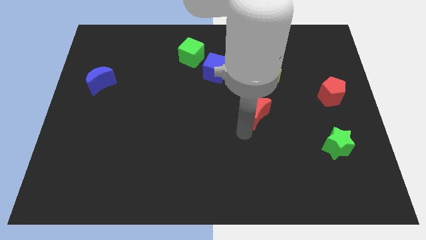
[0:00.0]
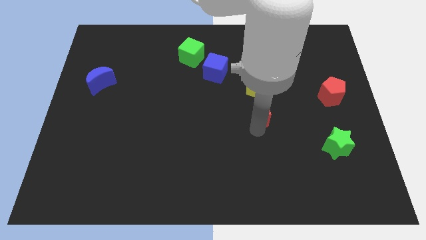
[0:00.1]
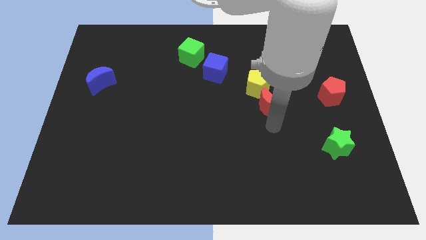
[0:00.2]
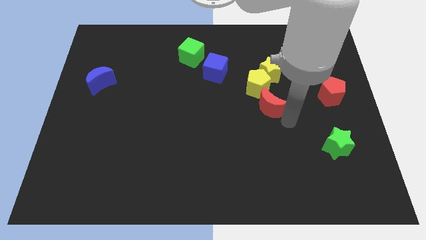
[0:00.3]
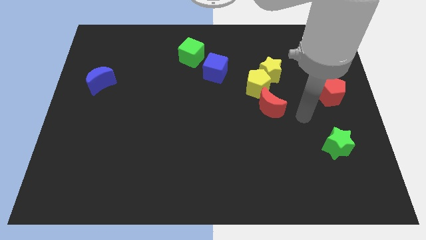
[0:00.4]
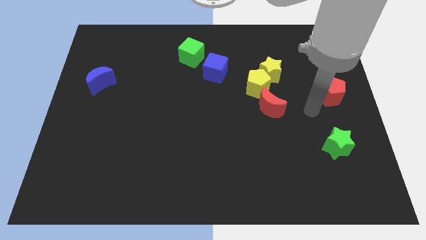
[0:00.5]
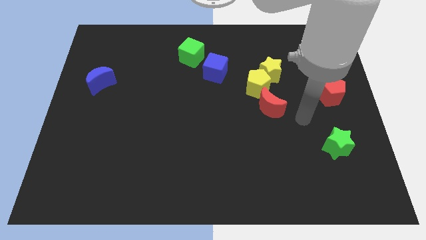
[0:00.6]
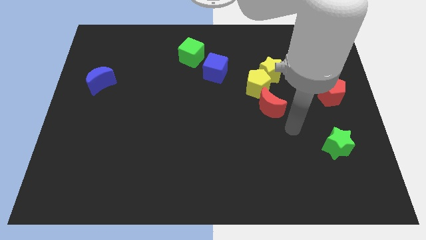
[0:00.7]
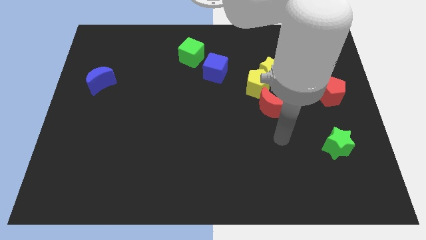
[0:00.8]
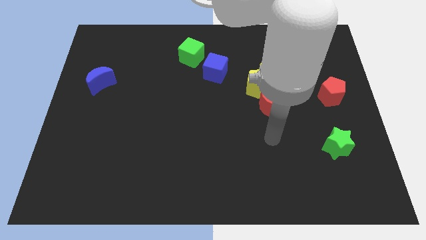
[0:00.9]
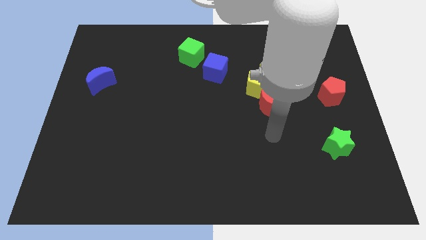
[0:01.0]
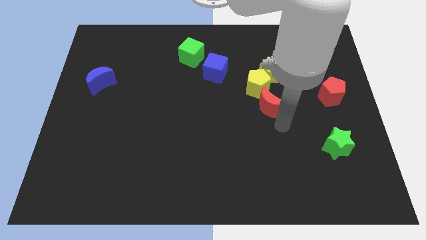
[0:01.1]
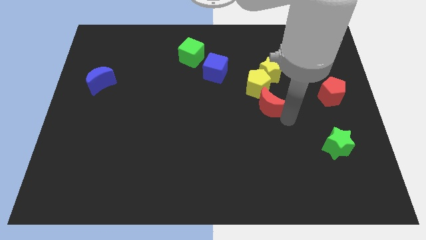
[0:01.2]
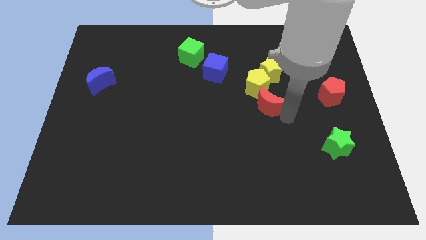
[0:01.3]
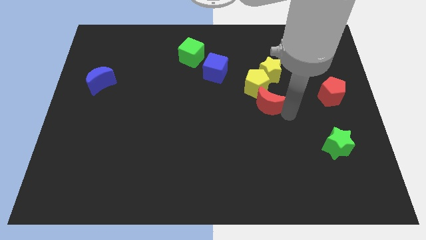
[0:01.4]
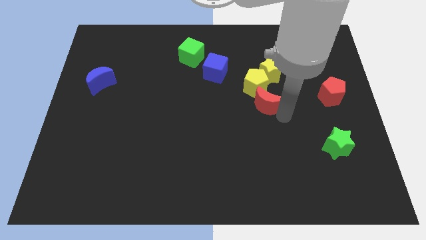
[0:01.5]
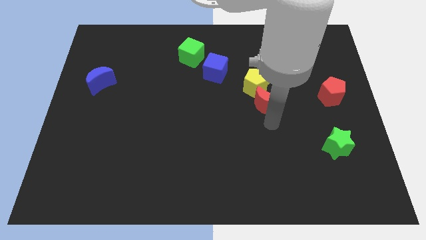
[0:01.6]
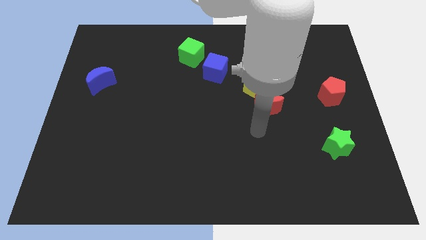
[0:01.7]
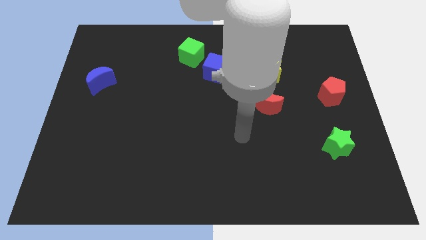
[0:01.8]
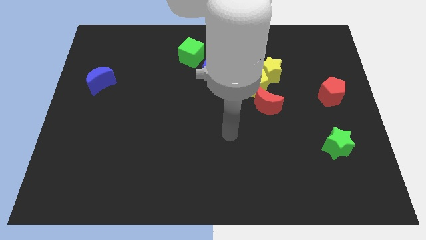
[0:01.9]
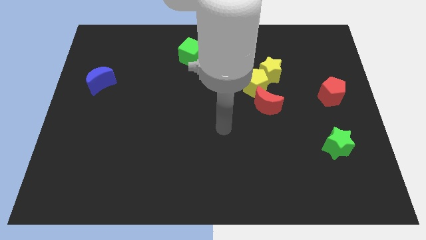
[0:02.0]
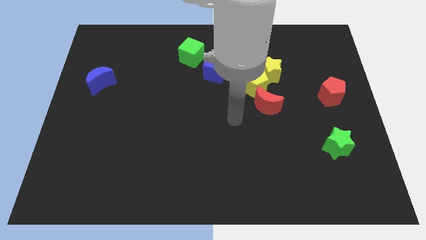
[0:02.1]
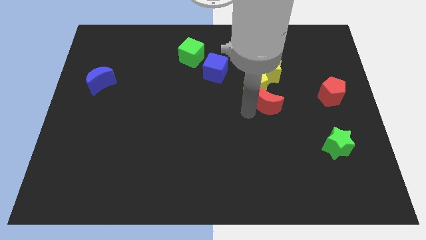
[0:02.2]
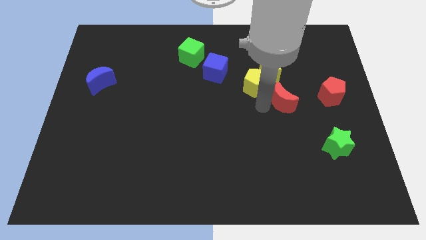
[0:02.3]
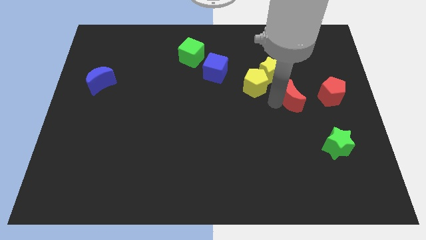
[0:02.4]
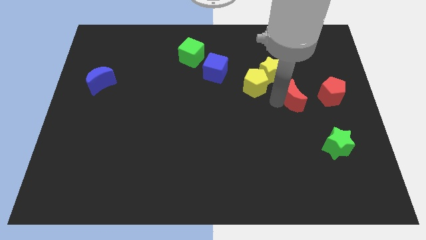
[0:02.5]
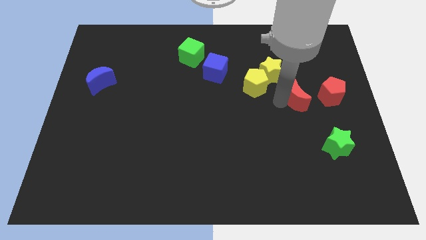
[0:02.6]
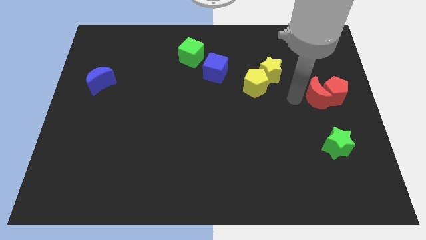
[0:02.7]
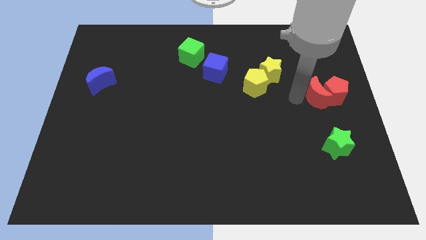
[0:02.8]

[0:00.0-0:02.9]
place red crescent near to red pentagon

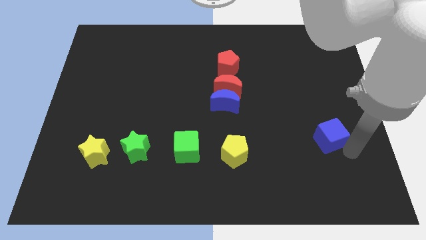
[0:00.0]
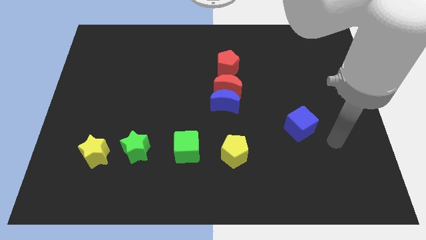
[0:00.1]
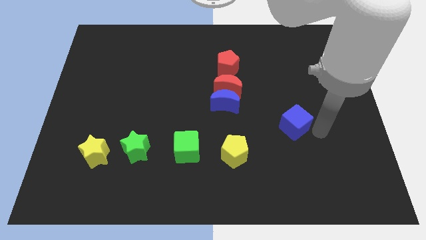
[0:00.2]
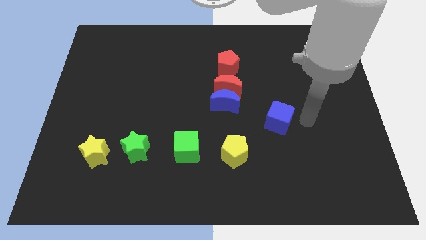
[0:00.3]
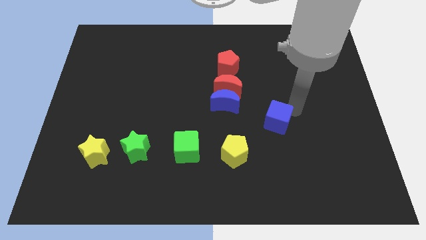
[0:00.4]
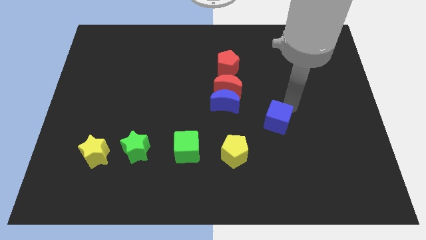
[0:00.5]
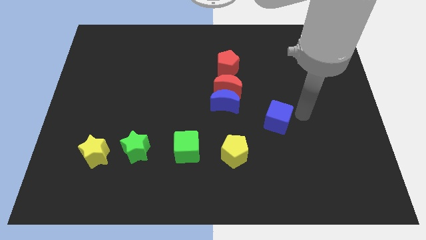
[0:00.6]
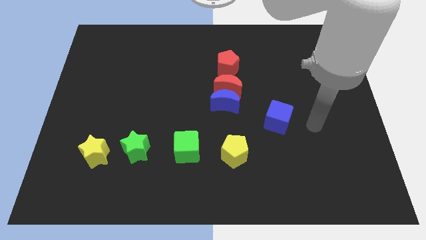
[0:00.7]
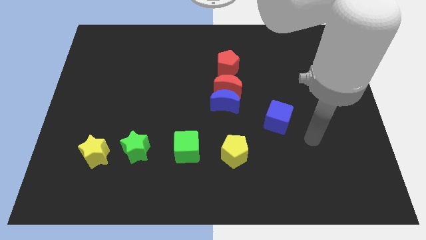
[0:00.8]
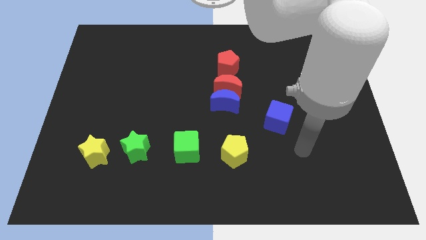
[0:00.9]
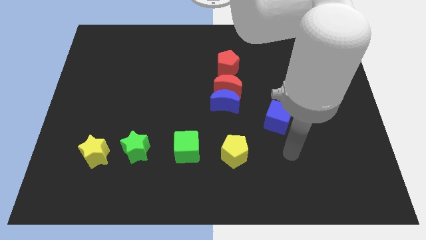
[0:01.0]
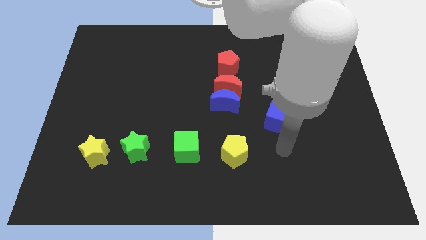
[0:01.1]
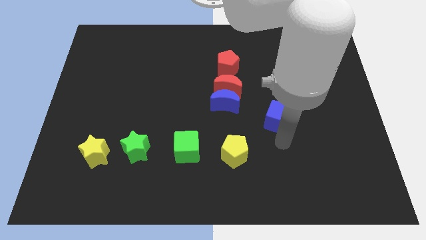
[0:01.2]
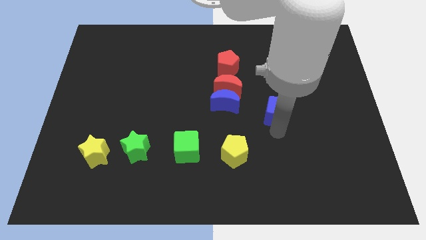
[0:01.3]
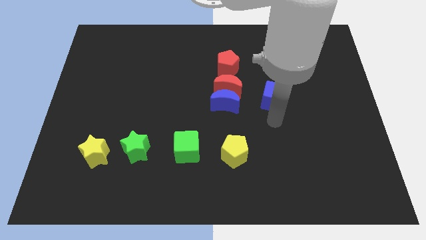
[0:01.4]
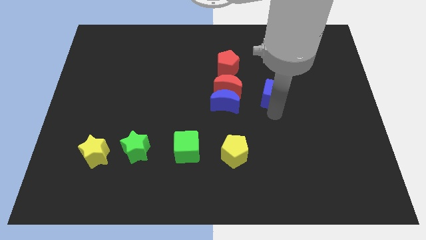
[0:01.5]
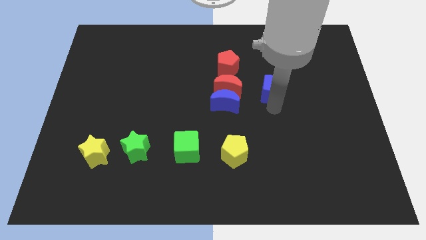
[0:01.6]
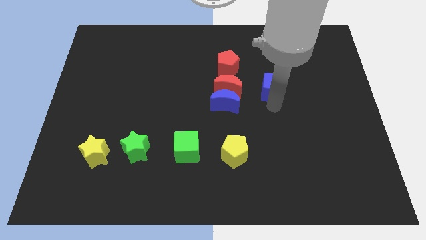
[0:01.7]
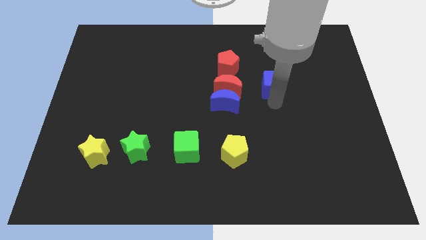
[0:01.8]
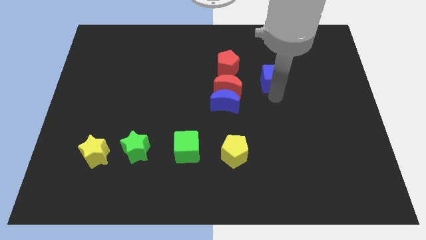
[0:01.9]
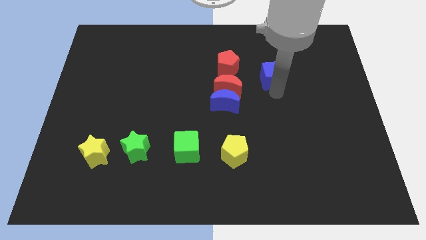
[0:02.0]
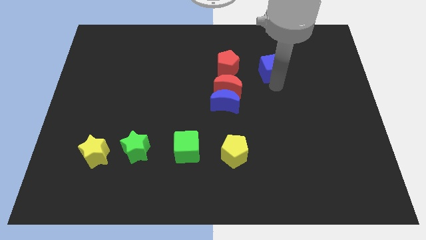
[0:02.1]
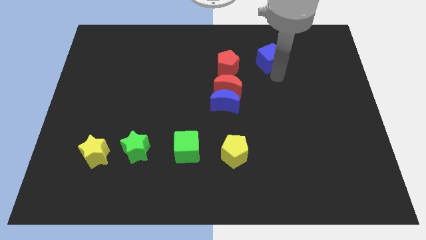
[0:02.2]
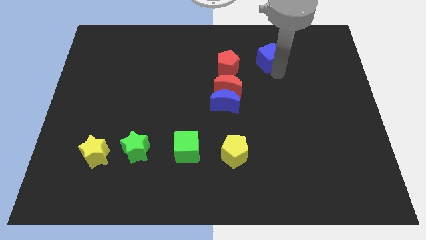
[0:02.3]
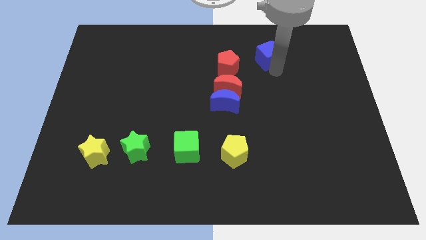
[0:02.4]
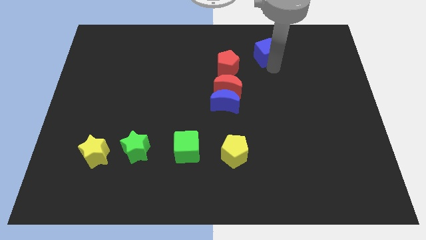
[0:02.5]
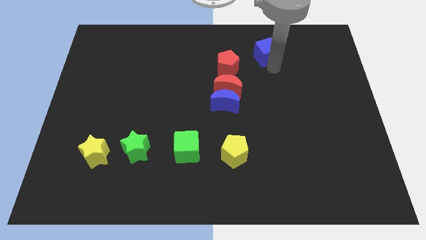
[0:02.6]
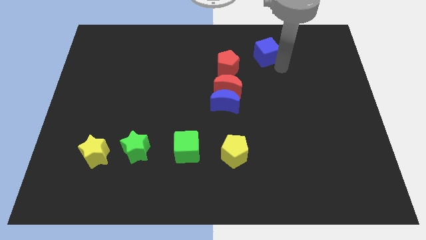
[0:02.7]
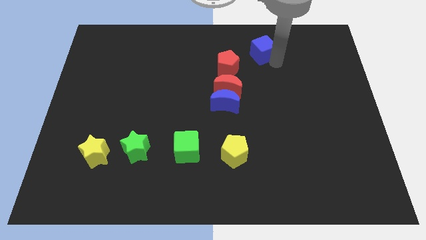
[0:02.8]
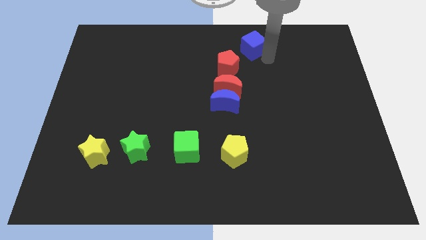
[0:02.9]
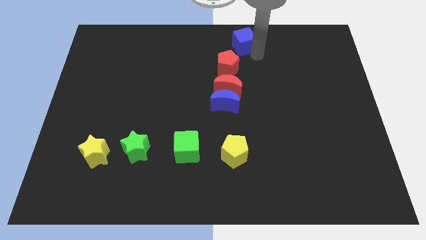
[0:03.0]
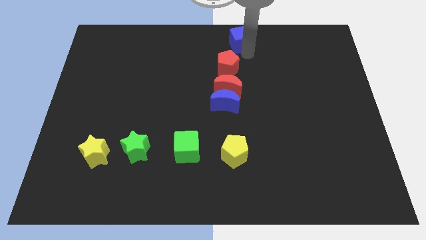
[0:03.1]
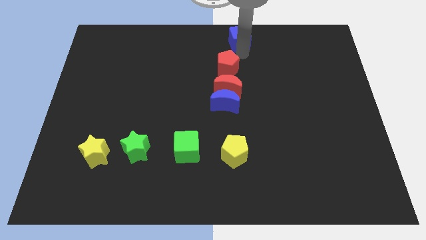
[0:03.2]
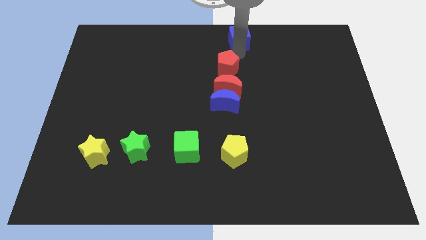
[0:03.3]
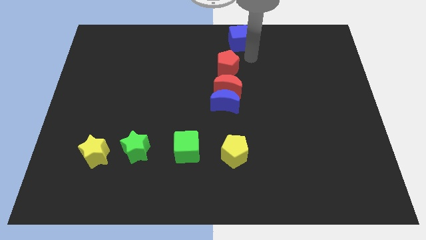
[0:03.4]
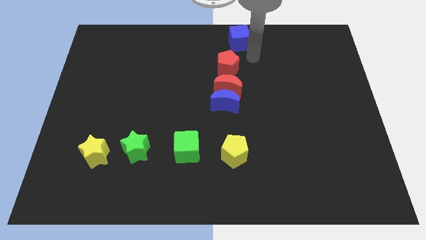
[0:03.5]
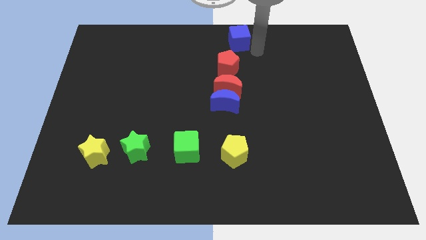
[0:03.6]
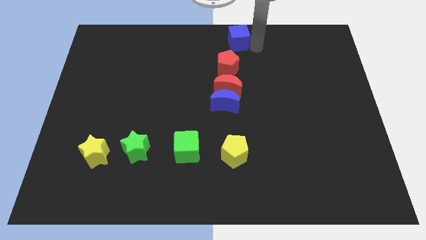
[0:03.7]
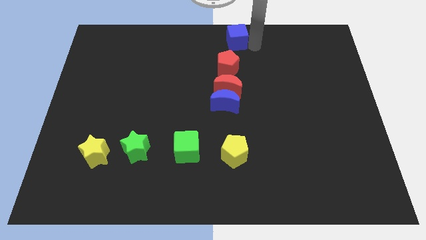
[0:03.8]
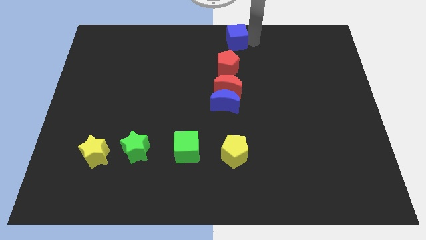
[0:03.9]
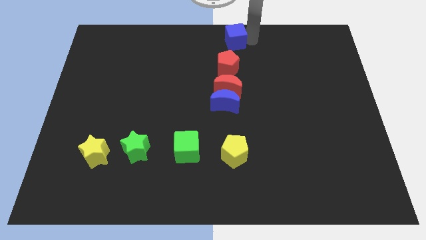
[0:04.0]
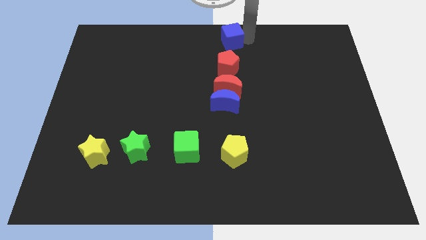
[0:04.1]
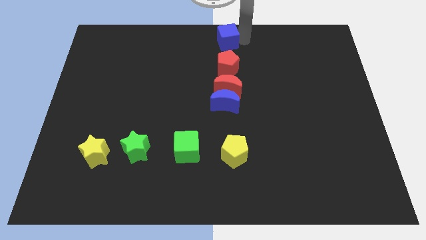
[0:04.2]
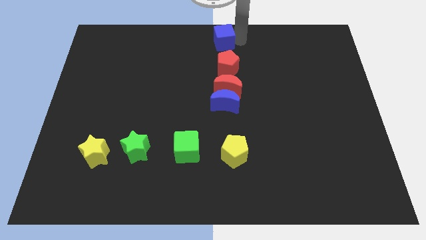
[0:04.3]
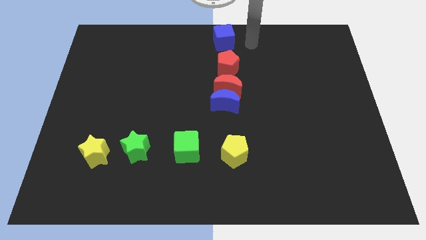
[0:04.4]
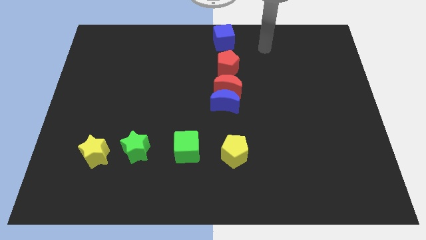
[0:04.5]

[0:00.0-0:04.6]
push the blue cube to the top of the red pentagon

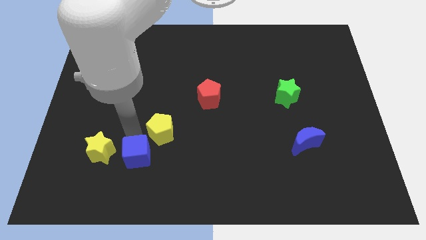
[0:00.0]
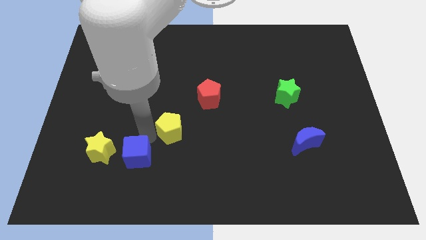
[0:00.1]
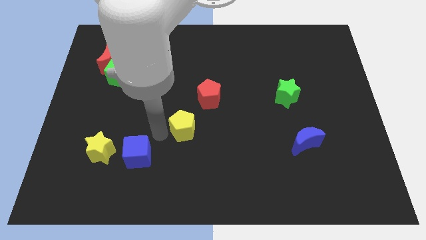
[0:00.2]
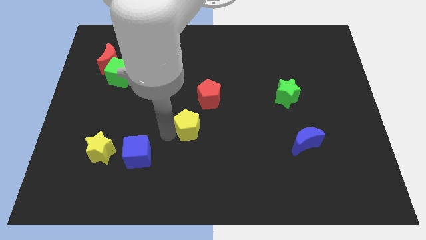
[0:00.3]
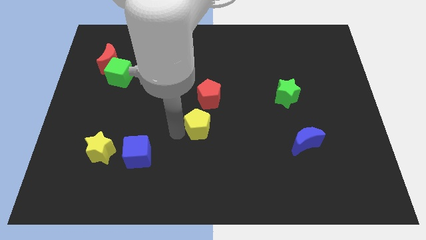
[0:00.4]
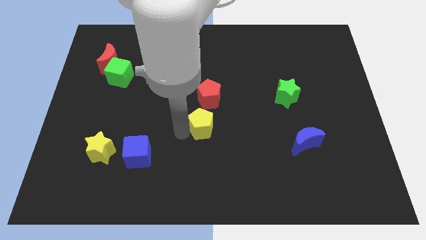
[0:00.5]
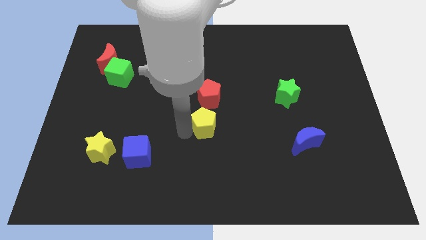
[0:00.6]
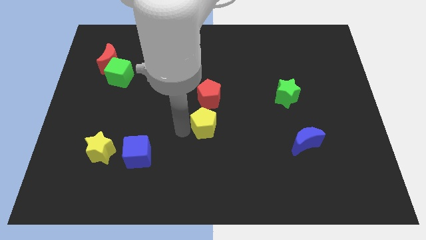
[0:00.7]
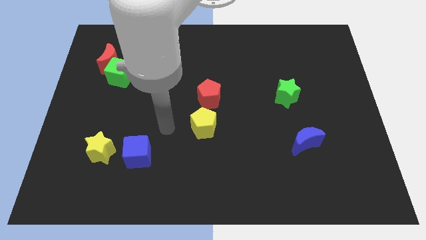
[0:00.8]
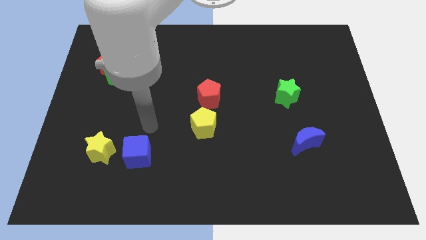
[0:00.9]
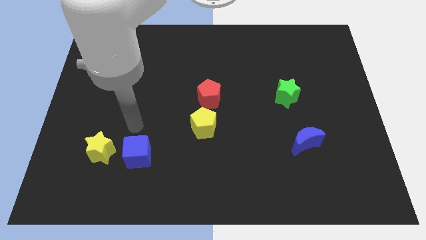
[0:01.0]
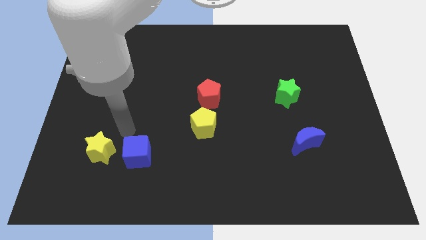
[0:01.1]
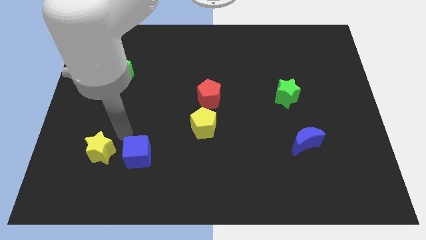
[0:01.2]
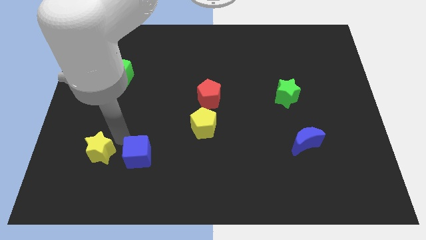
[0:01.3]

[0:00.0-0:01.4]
move the yellow pentagon close to the red pentagon
